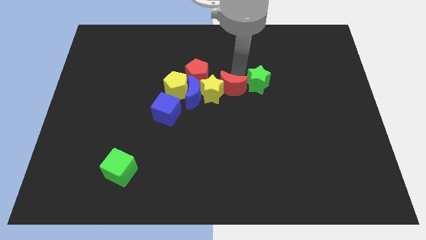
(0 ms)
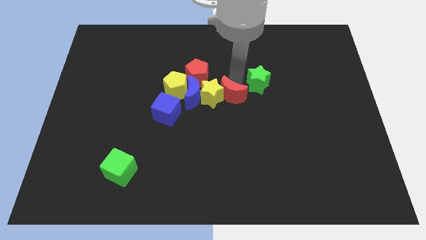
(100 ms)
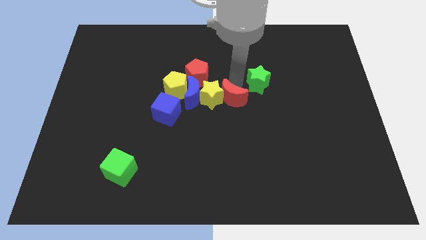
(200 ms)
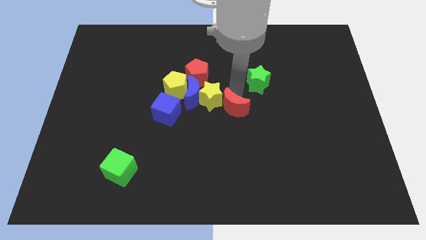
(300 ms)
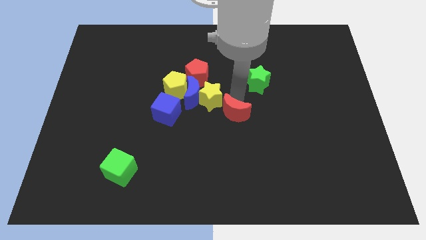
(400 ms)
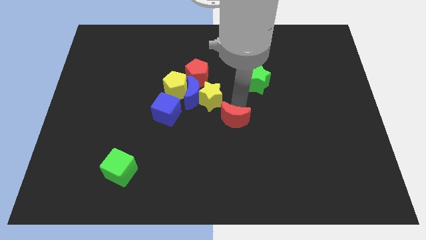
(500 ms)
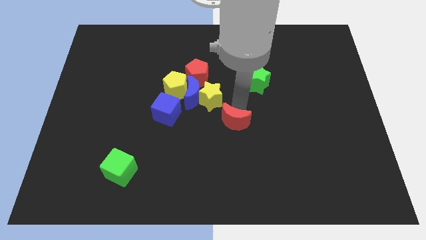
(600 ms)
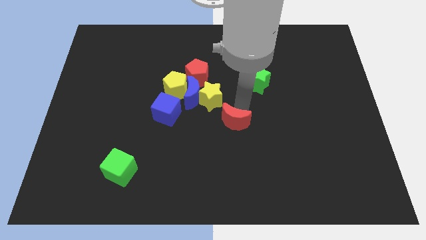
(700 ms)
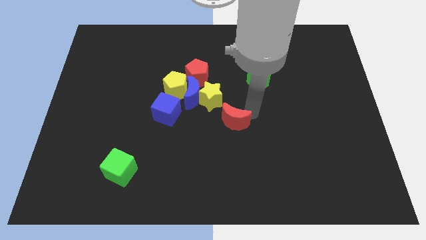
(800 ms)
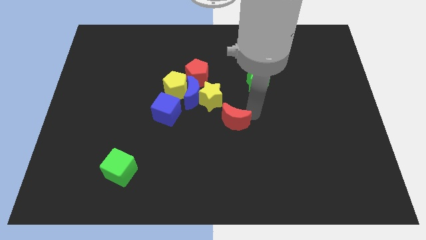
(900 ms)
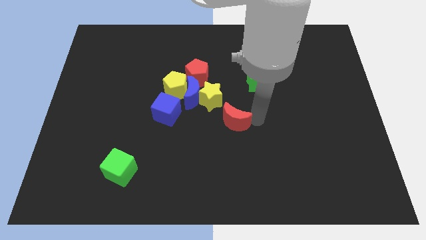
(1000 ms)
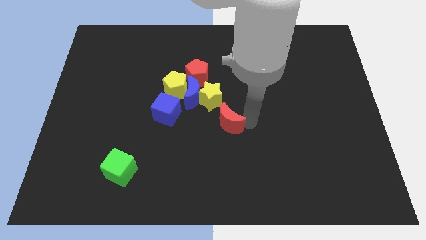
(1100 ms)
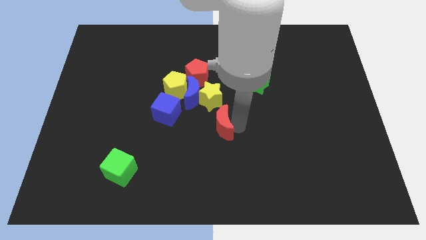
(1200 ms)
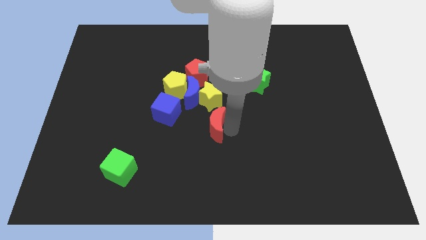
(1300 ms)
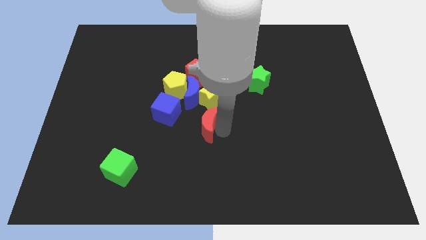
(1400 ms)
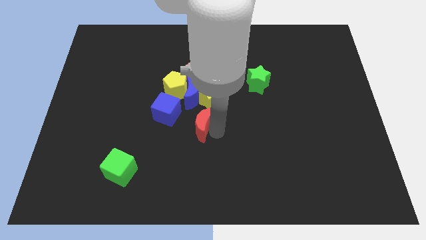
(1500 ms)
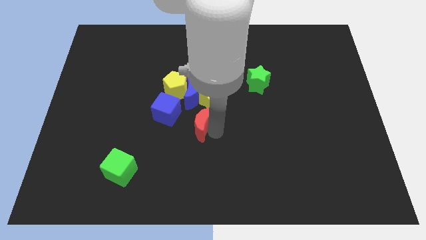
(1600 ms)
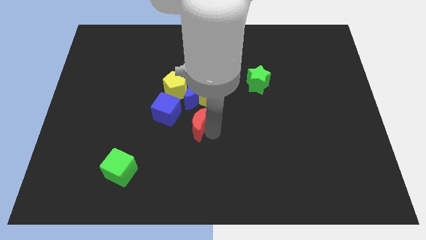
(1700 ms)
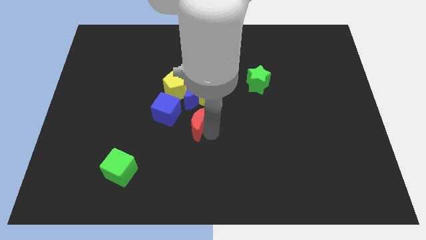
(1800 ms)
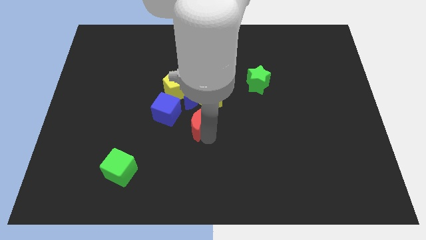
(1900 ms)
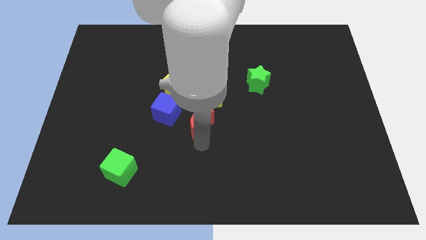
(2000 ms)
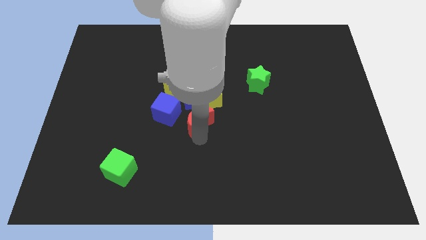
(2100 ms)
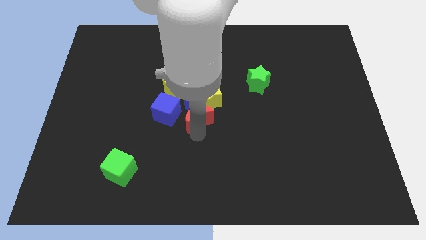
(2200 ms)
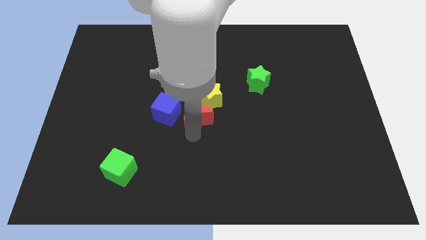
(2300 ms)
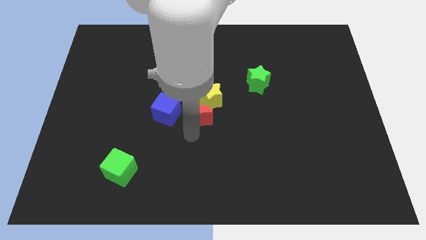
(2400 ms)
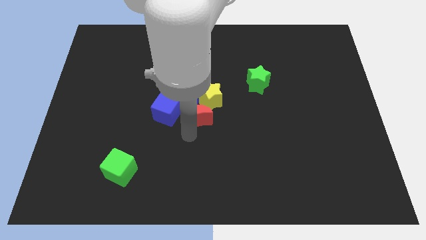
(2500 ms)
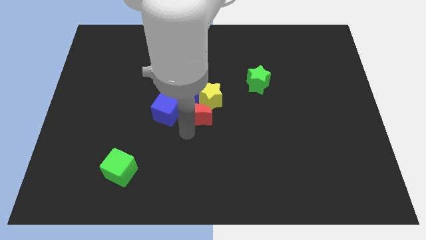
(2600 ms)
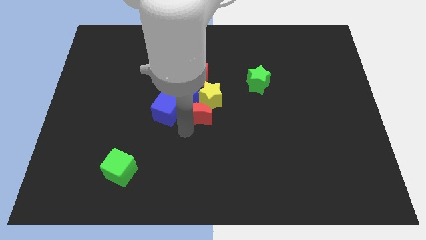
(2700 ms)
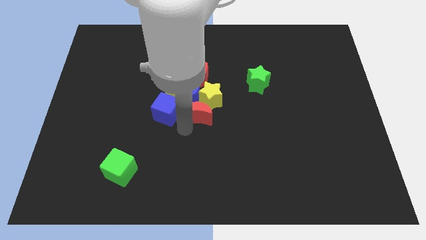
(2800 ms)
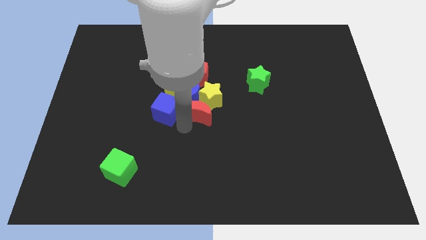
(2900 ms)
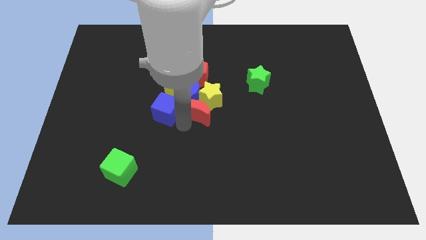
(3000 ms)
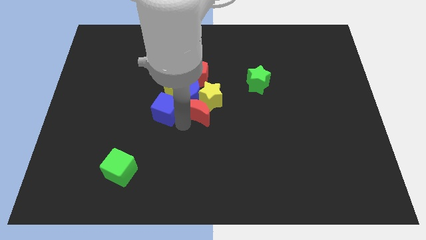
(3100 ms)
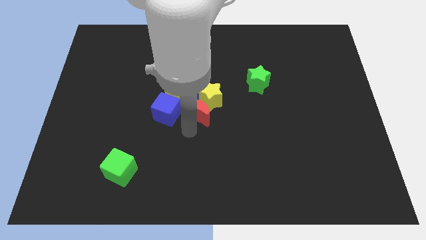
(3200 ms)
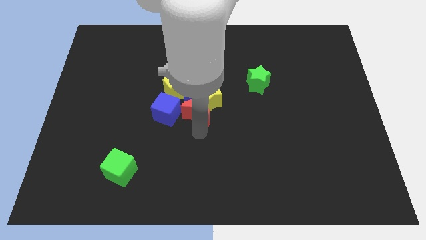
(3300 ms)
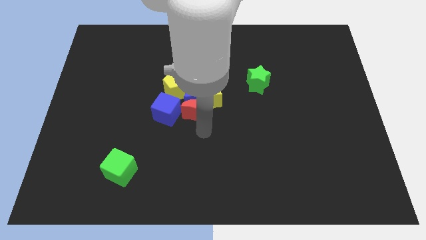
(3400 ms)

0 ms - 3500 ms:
move red moon into group of blocks

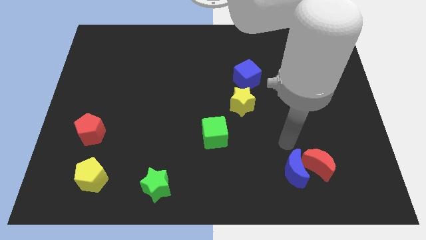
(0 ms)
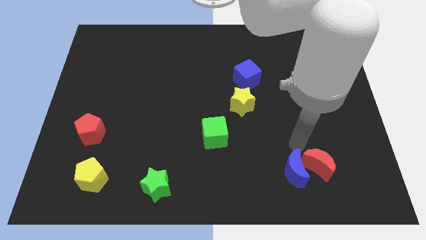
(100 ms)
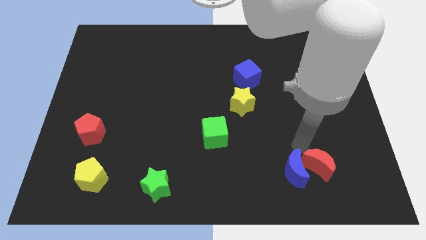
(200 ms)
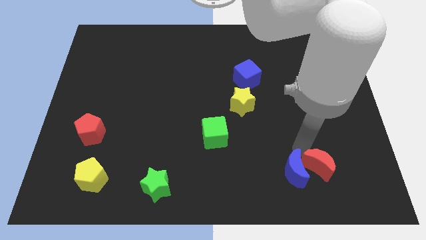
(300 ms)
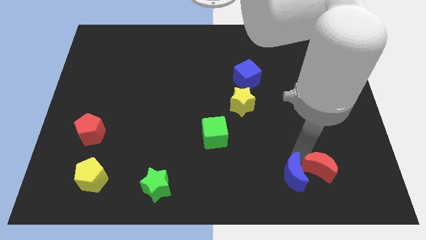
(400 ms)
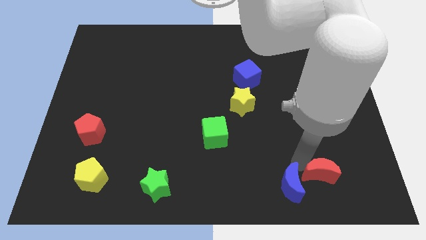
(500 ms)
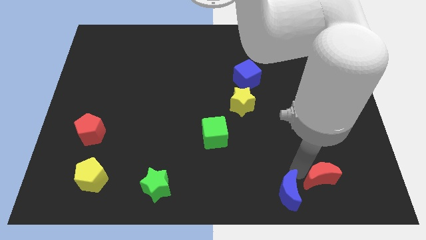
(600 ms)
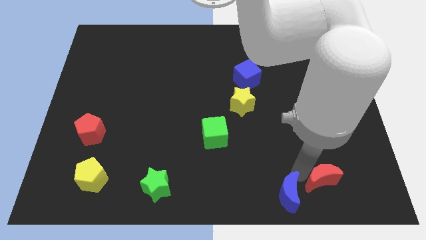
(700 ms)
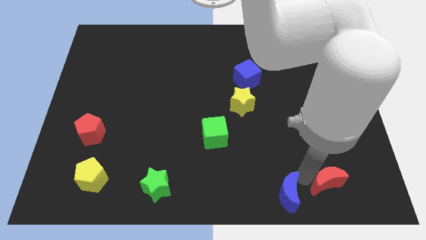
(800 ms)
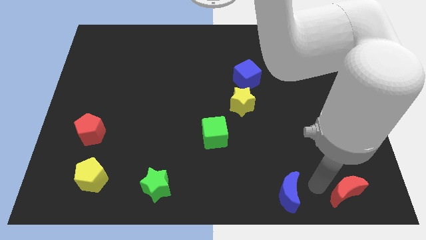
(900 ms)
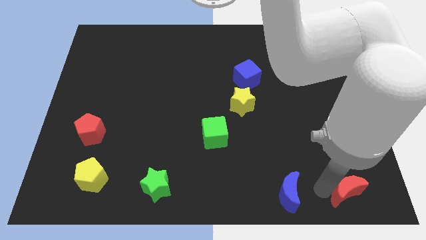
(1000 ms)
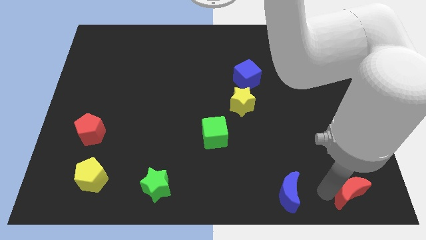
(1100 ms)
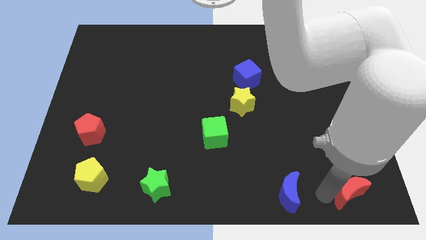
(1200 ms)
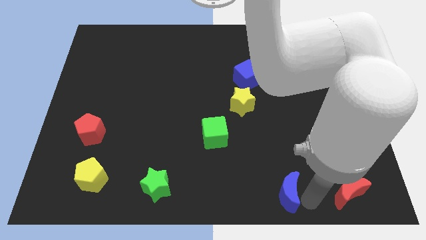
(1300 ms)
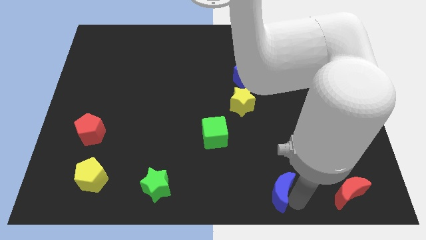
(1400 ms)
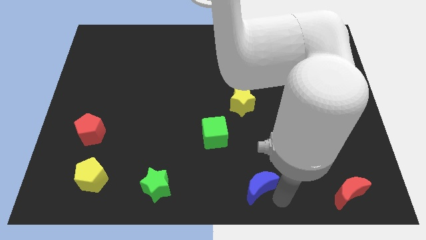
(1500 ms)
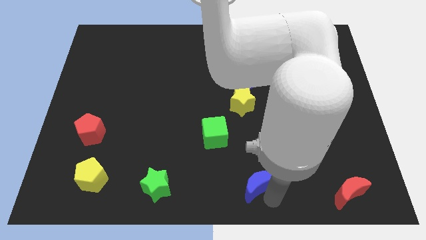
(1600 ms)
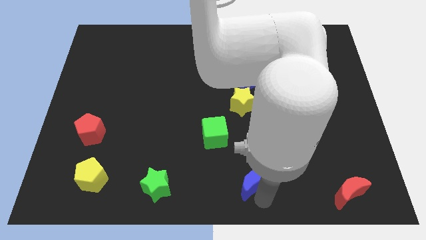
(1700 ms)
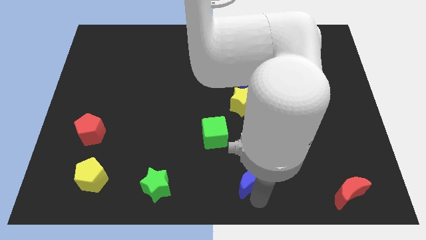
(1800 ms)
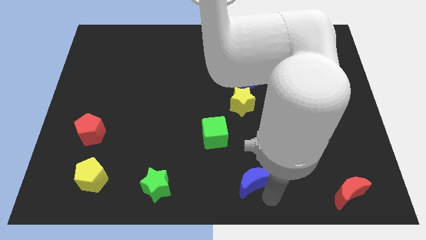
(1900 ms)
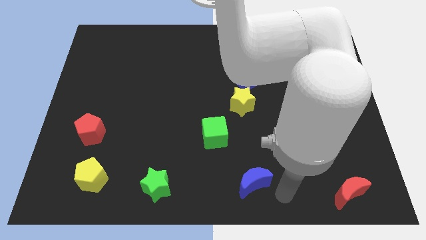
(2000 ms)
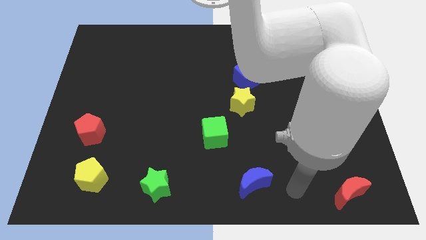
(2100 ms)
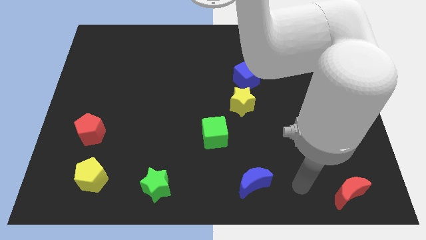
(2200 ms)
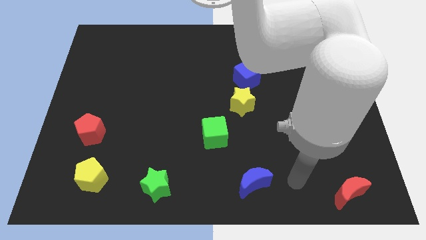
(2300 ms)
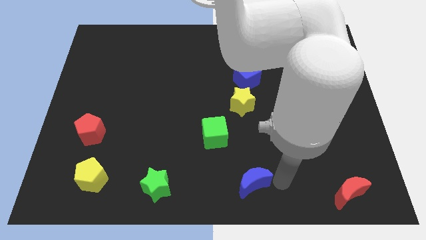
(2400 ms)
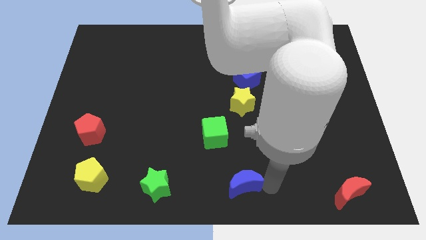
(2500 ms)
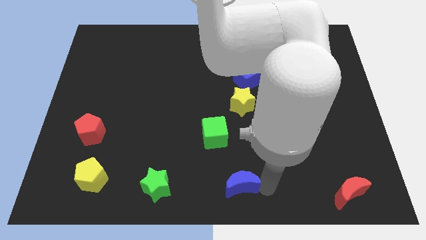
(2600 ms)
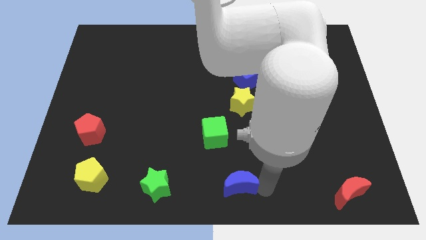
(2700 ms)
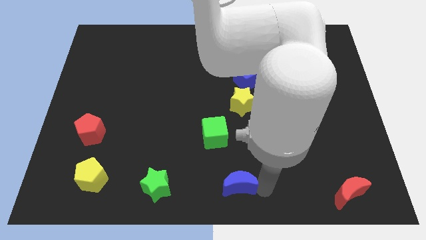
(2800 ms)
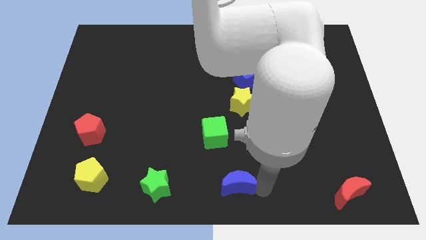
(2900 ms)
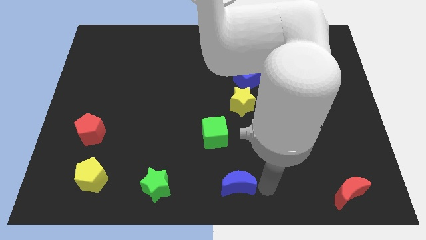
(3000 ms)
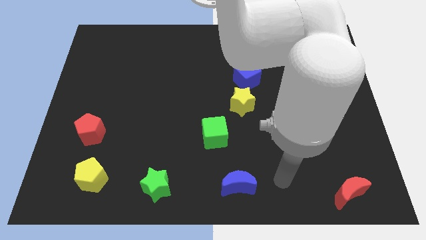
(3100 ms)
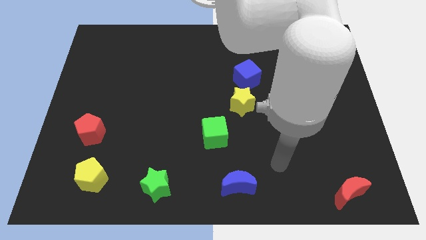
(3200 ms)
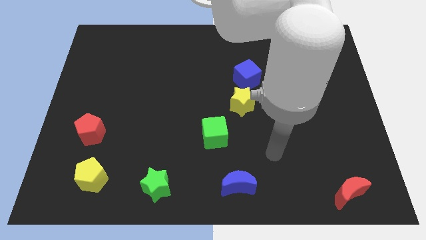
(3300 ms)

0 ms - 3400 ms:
place the blue crescent parallel to the green star

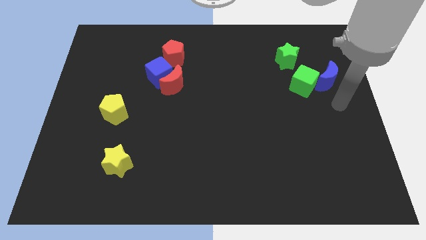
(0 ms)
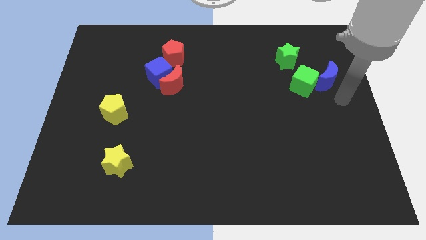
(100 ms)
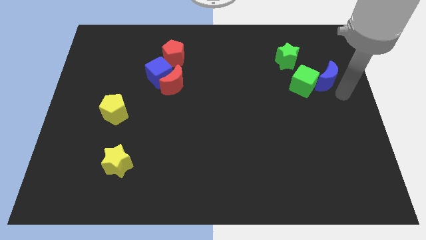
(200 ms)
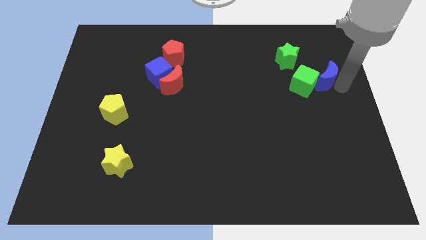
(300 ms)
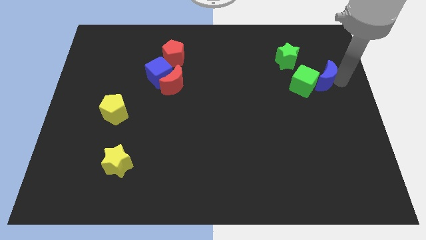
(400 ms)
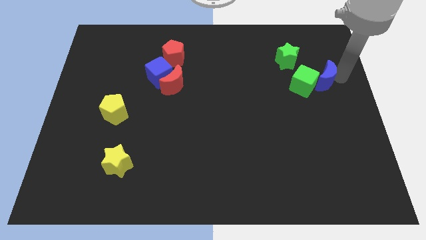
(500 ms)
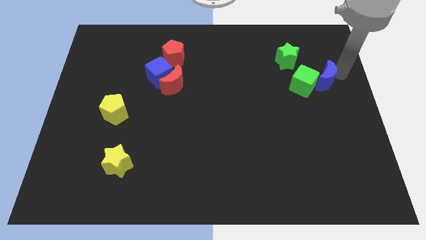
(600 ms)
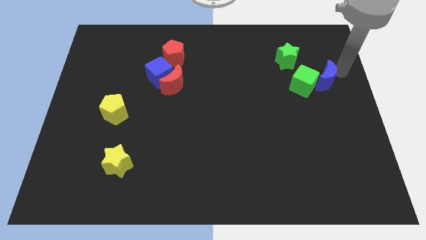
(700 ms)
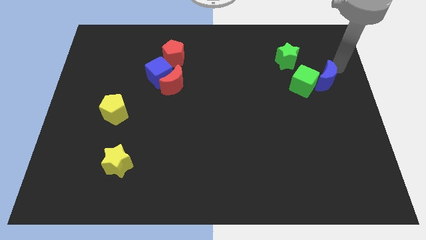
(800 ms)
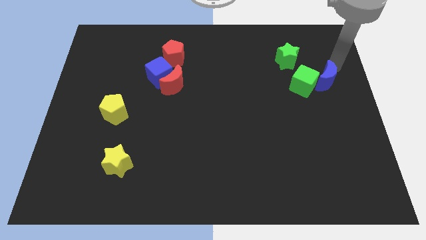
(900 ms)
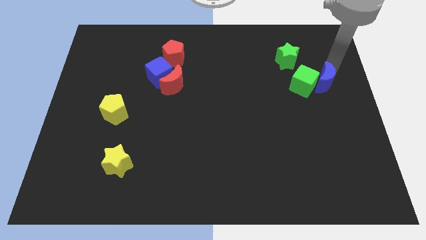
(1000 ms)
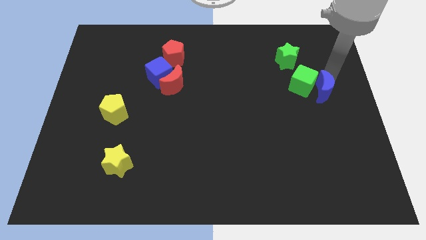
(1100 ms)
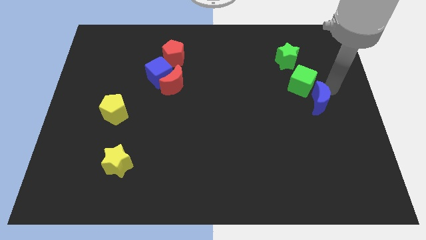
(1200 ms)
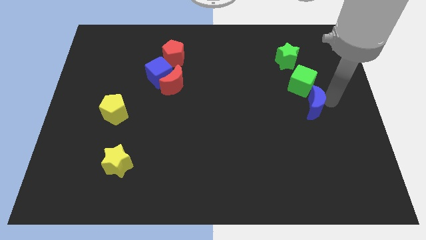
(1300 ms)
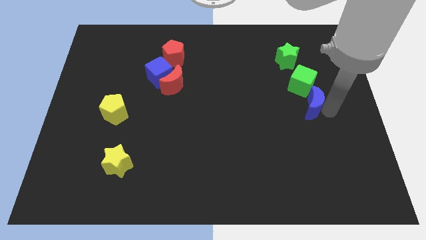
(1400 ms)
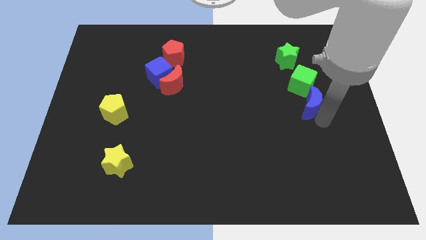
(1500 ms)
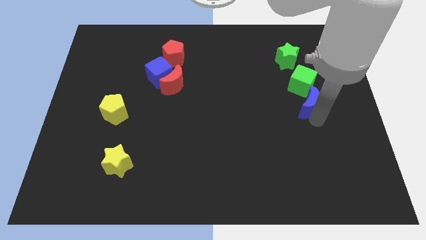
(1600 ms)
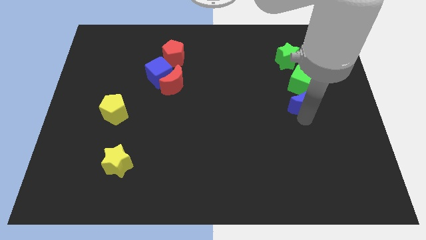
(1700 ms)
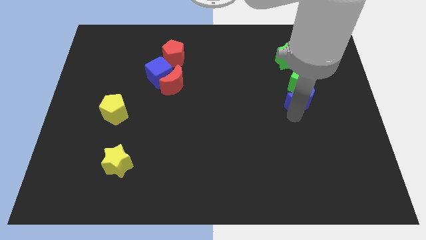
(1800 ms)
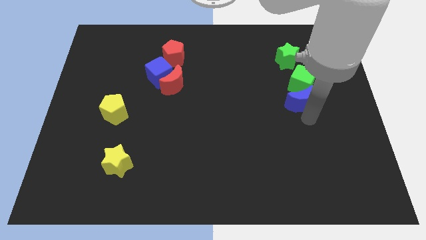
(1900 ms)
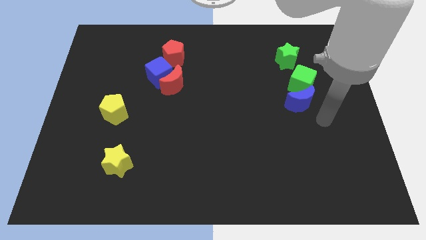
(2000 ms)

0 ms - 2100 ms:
place the blue moon below the green cube

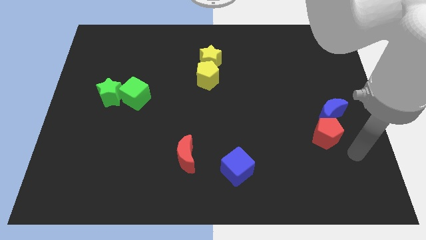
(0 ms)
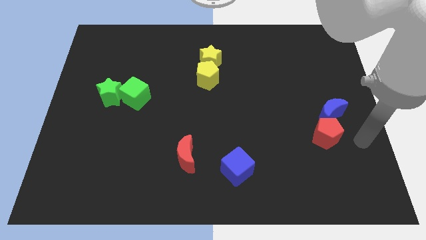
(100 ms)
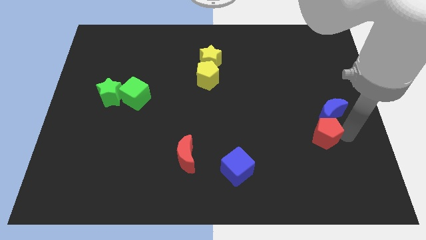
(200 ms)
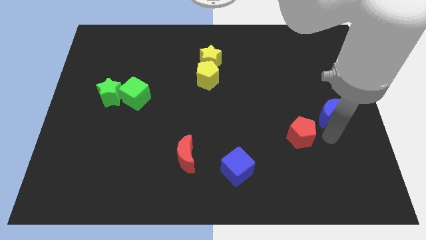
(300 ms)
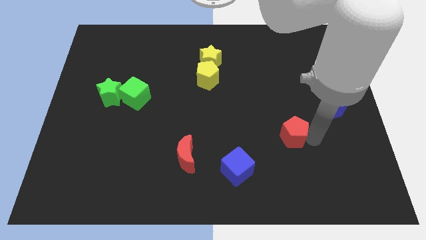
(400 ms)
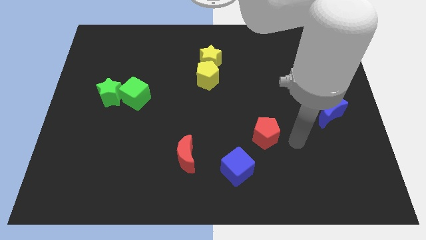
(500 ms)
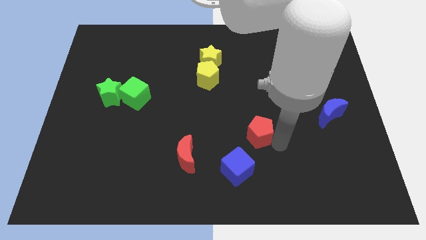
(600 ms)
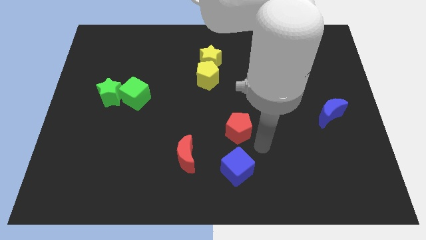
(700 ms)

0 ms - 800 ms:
move the red pentagon to the top of the blue cube
